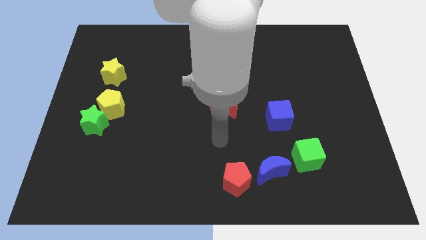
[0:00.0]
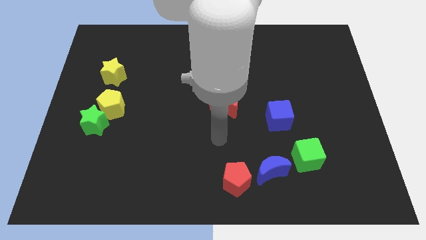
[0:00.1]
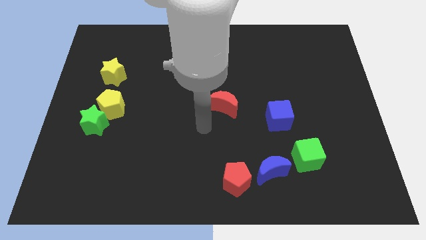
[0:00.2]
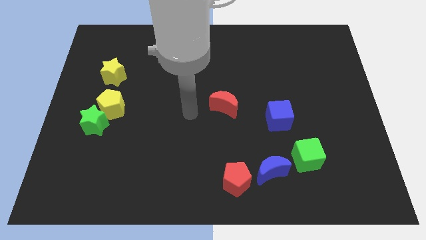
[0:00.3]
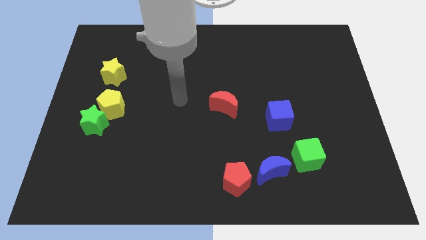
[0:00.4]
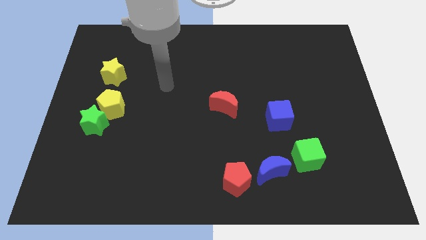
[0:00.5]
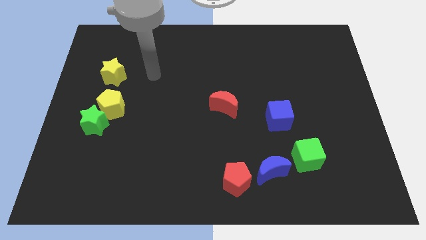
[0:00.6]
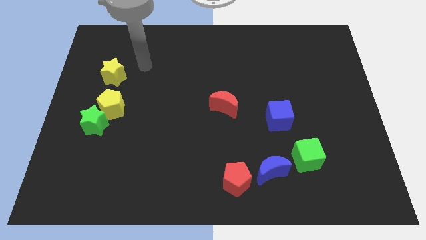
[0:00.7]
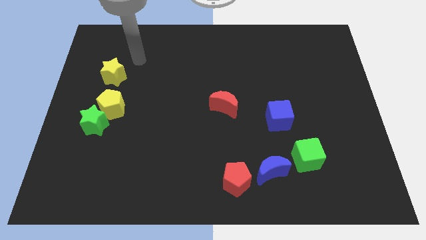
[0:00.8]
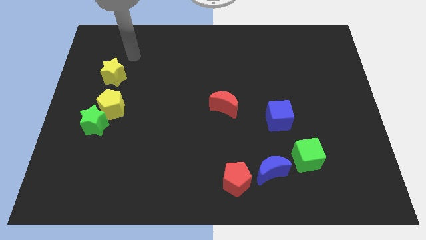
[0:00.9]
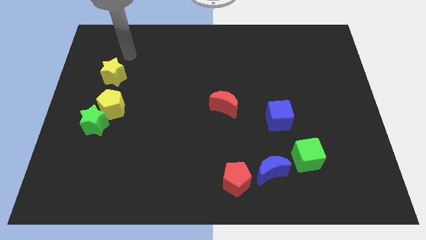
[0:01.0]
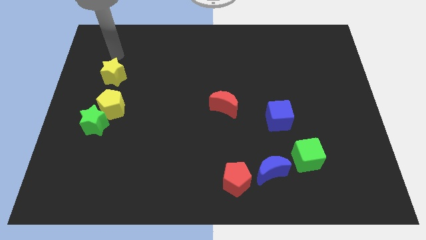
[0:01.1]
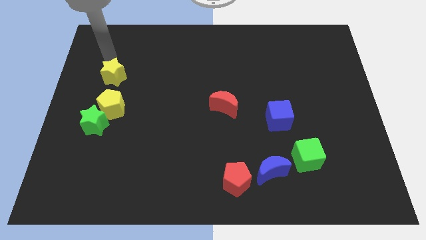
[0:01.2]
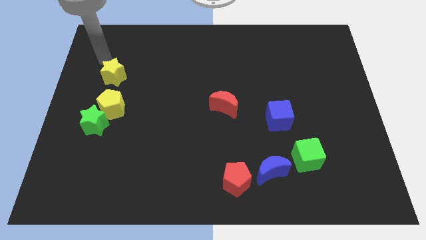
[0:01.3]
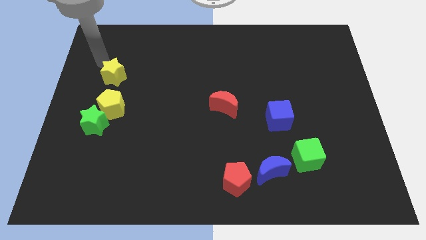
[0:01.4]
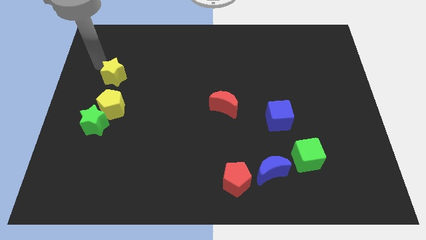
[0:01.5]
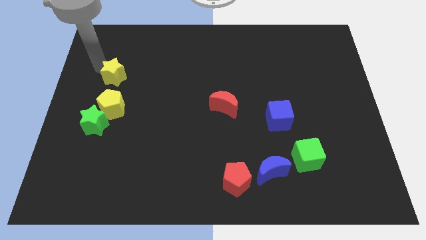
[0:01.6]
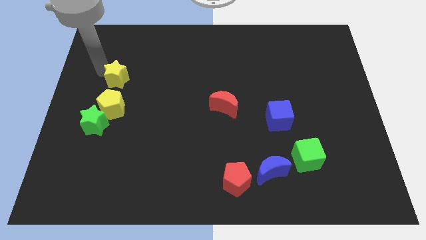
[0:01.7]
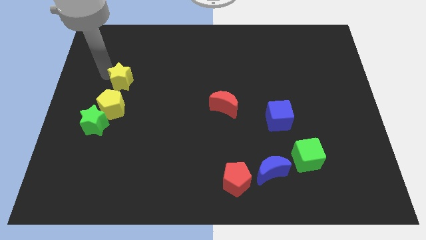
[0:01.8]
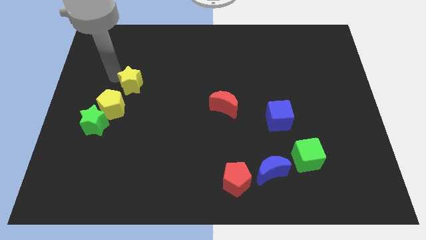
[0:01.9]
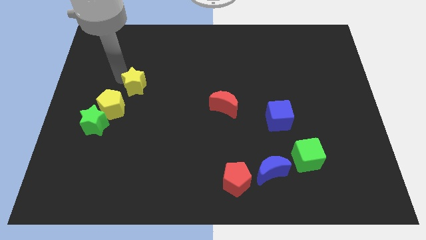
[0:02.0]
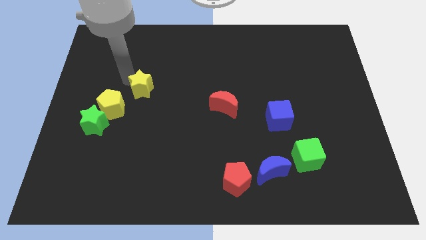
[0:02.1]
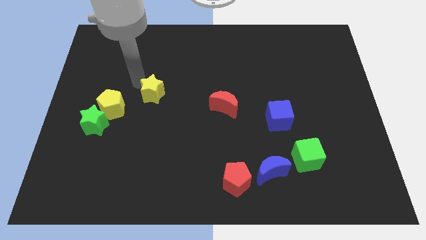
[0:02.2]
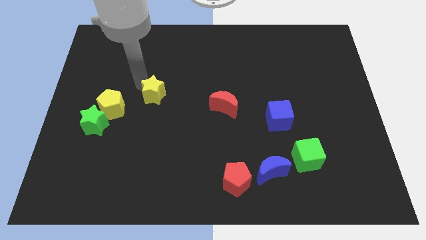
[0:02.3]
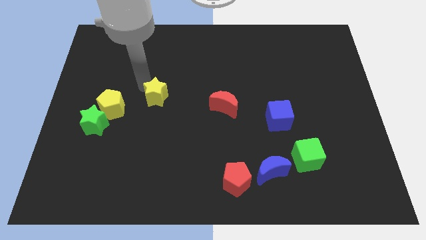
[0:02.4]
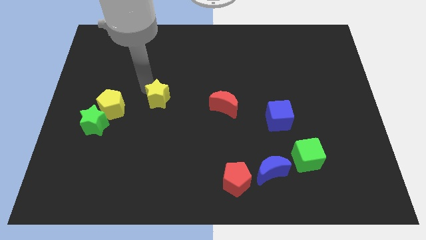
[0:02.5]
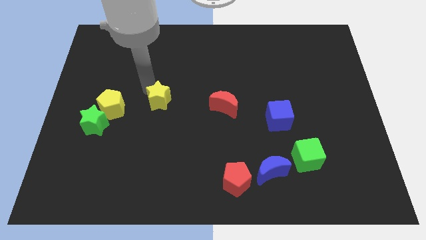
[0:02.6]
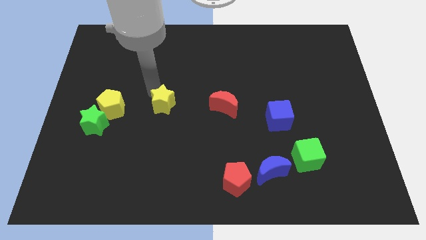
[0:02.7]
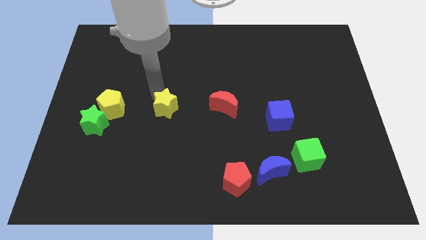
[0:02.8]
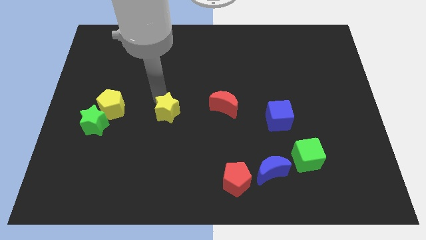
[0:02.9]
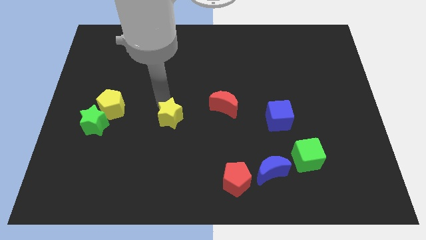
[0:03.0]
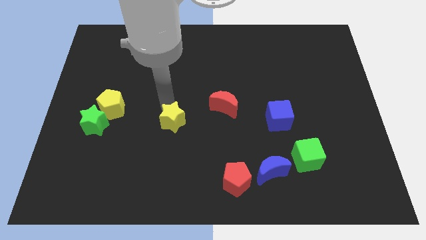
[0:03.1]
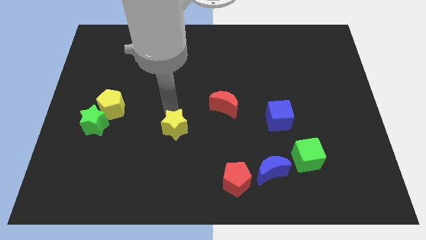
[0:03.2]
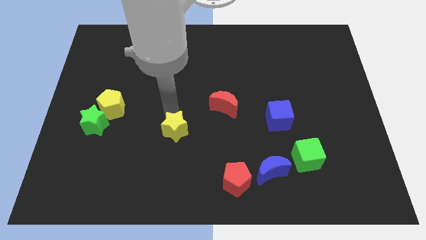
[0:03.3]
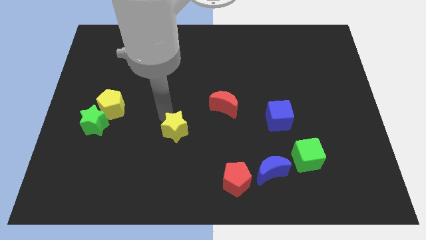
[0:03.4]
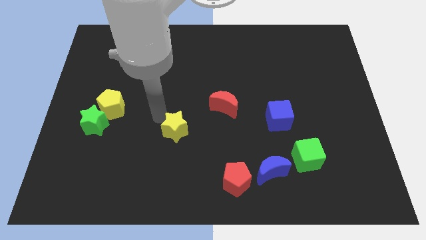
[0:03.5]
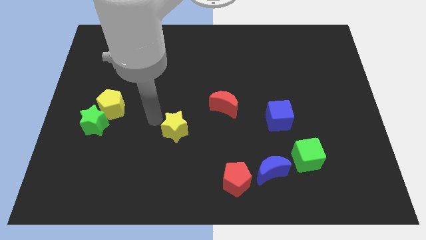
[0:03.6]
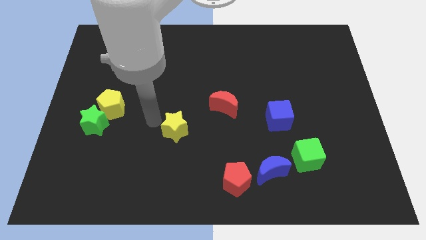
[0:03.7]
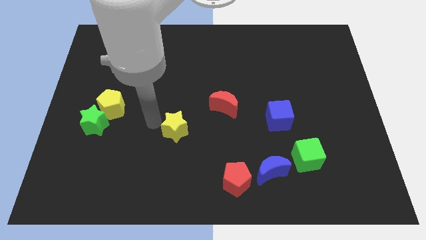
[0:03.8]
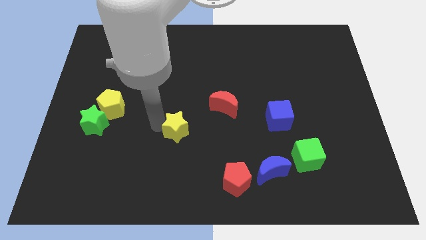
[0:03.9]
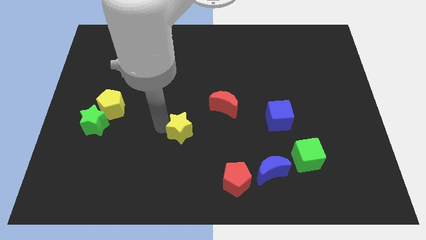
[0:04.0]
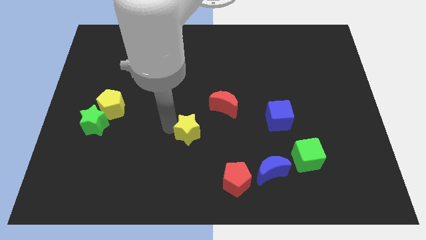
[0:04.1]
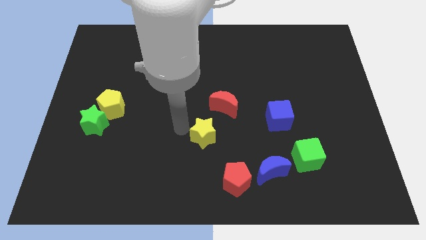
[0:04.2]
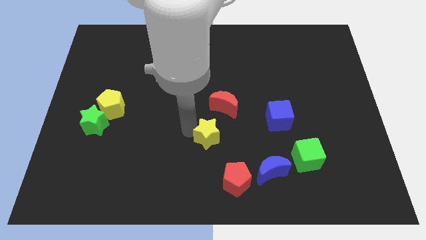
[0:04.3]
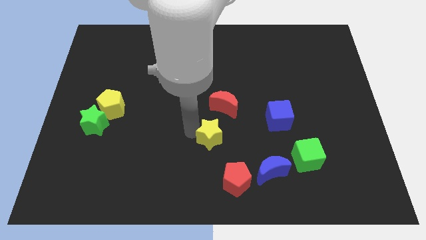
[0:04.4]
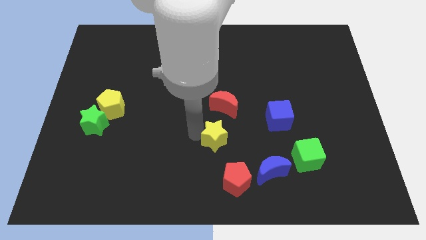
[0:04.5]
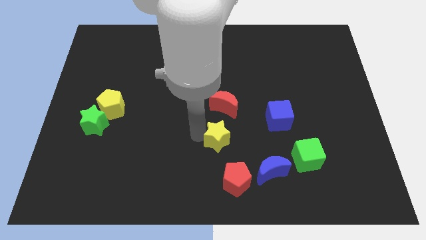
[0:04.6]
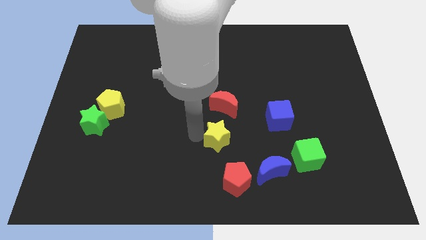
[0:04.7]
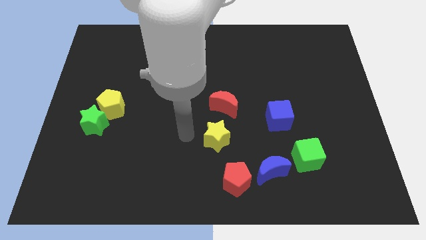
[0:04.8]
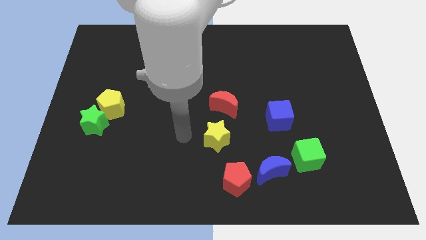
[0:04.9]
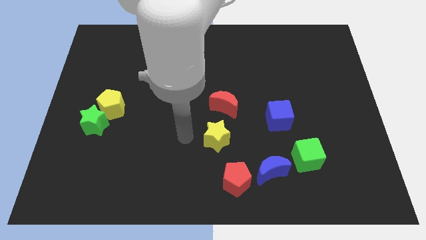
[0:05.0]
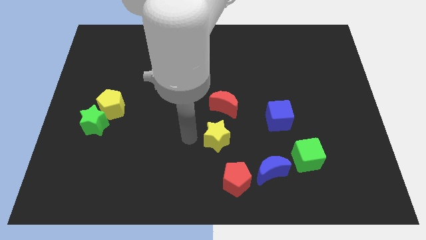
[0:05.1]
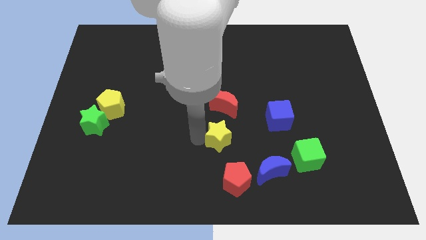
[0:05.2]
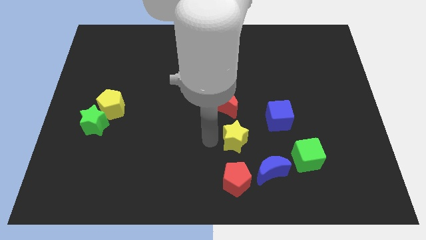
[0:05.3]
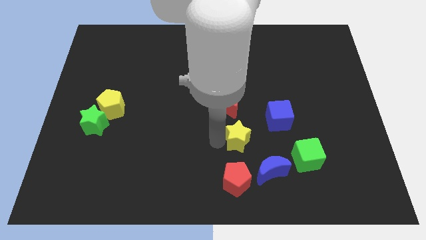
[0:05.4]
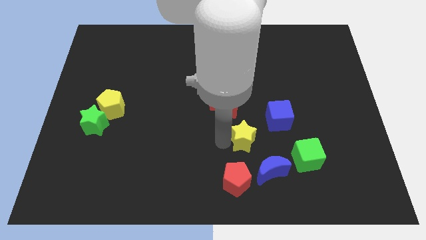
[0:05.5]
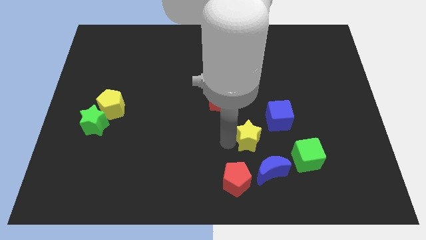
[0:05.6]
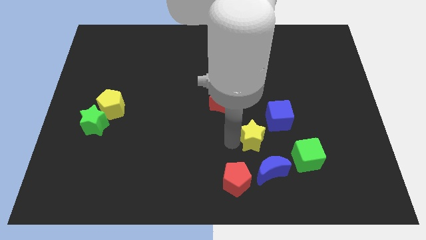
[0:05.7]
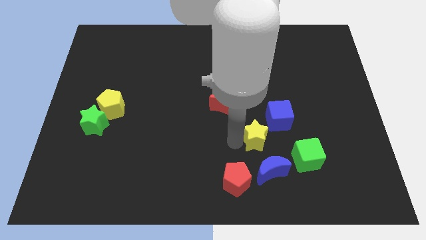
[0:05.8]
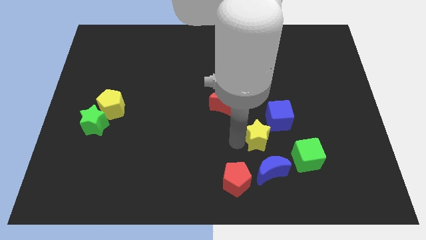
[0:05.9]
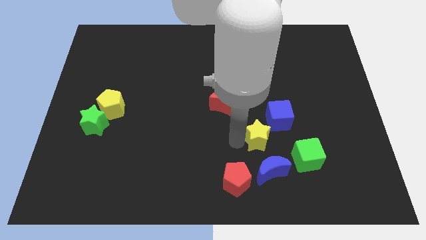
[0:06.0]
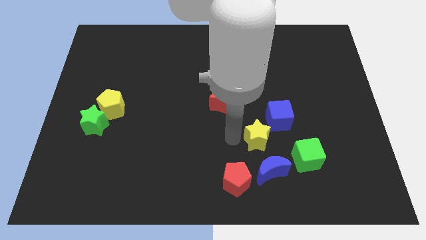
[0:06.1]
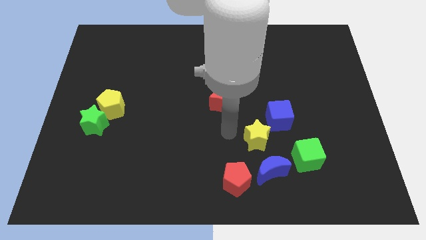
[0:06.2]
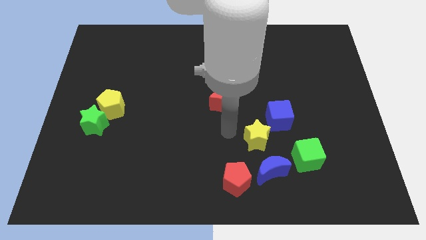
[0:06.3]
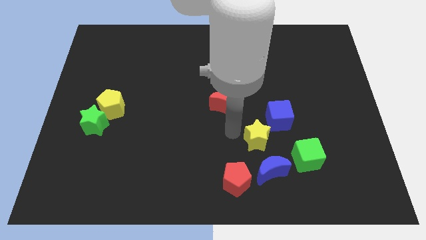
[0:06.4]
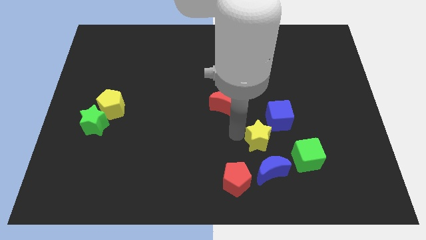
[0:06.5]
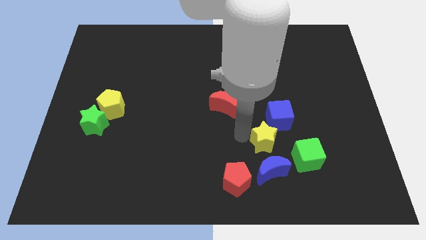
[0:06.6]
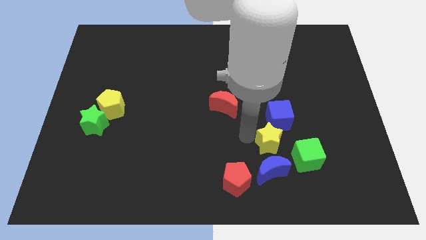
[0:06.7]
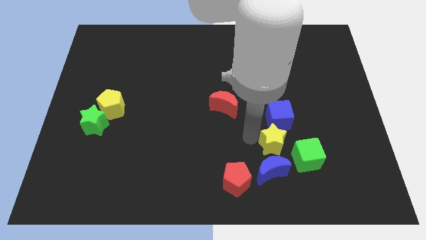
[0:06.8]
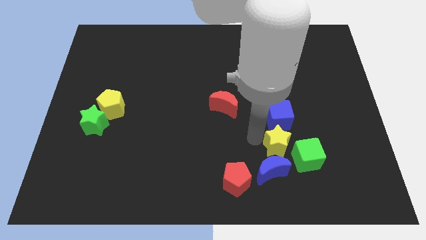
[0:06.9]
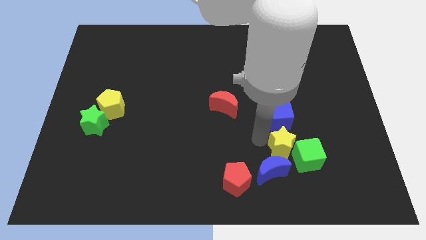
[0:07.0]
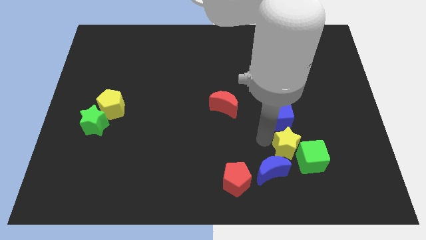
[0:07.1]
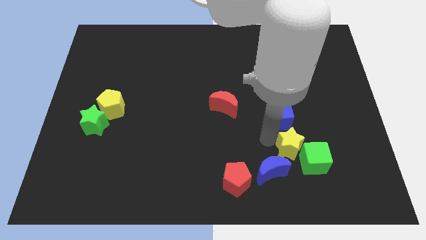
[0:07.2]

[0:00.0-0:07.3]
put the yellow star close to the green cube

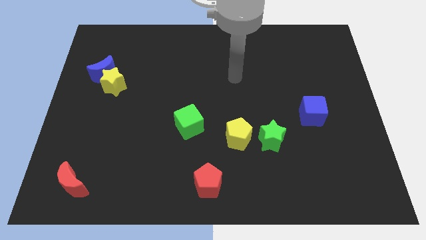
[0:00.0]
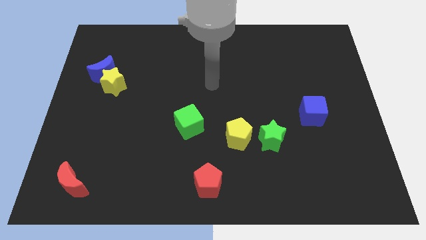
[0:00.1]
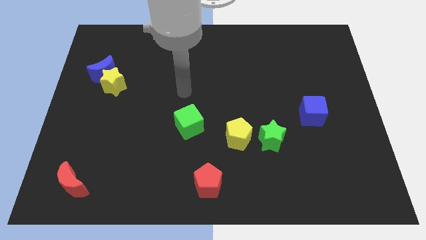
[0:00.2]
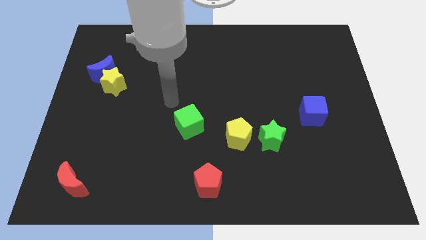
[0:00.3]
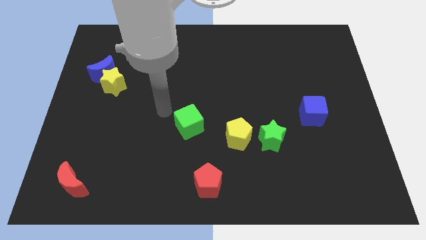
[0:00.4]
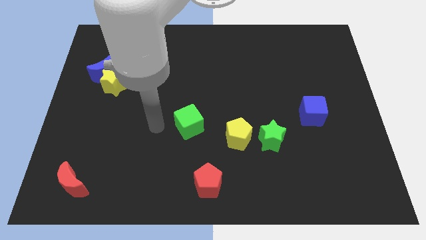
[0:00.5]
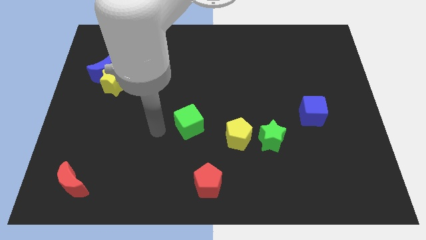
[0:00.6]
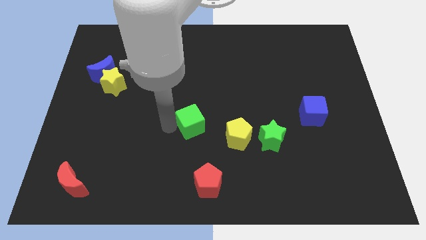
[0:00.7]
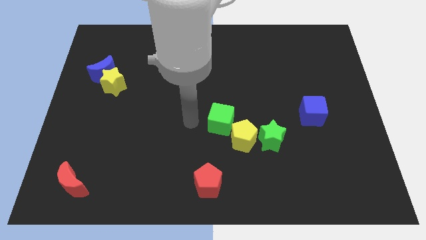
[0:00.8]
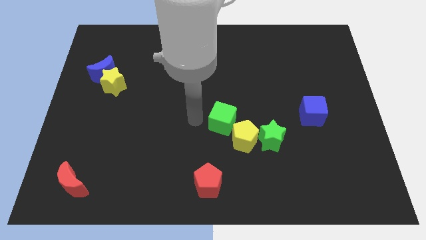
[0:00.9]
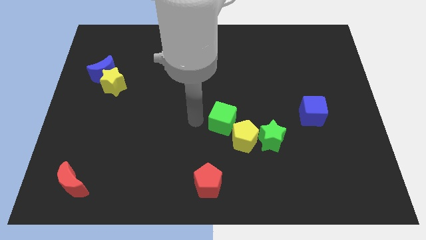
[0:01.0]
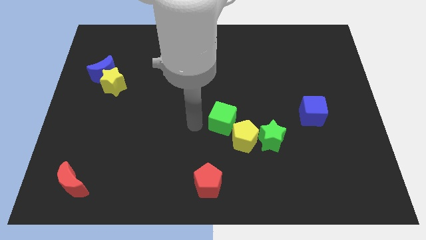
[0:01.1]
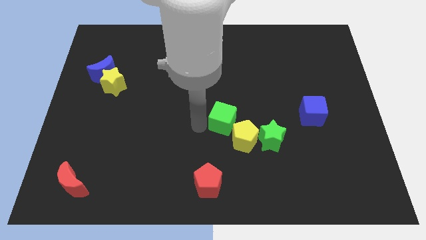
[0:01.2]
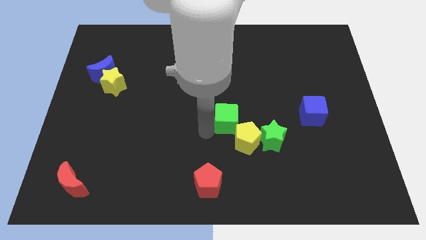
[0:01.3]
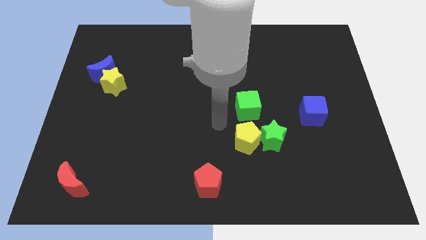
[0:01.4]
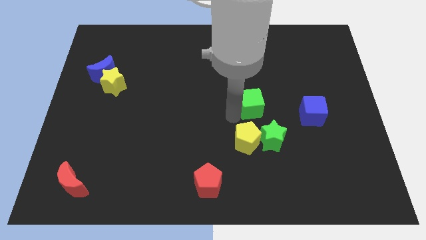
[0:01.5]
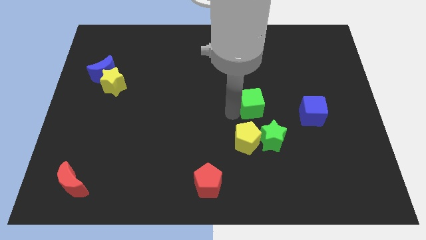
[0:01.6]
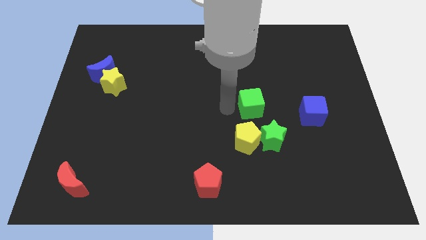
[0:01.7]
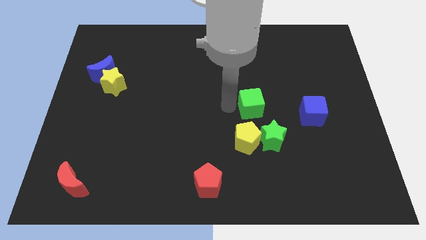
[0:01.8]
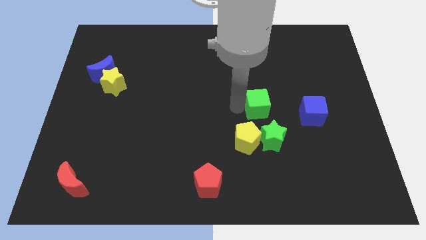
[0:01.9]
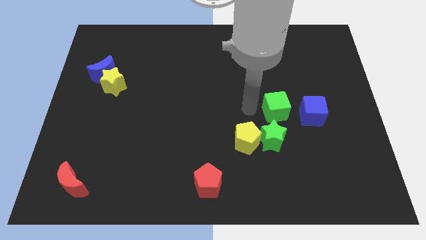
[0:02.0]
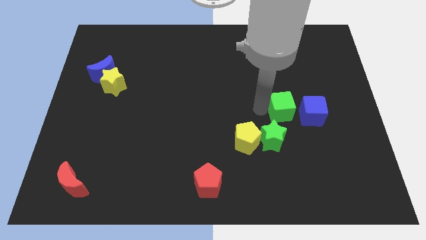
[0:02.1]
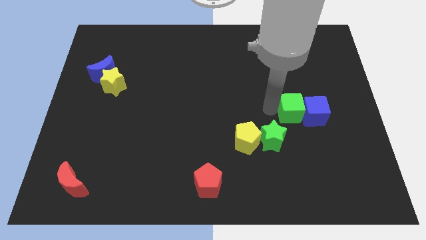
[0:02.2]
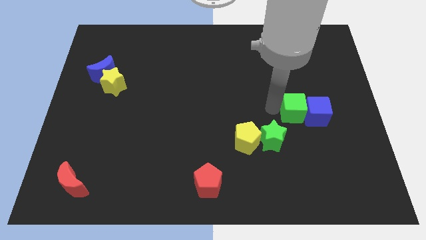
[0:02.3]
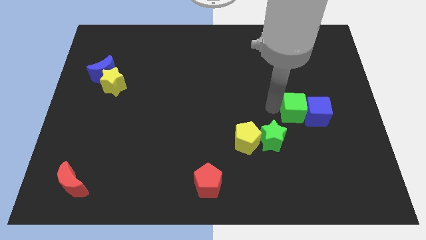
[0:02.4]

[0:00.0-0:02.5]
push the green cube close to the blue cube
